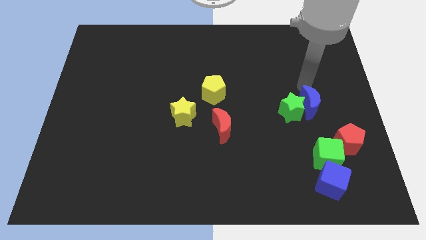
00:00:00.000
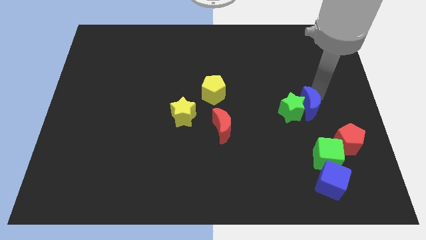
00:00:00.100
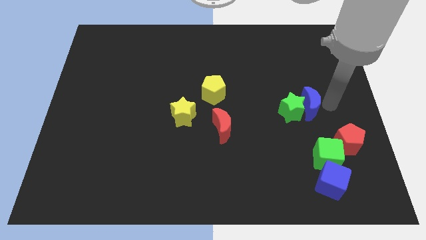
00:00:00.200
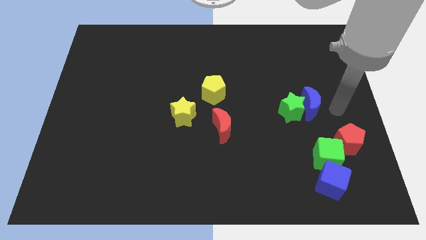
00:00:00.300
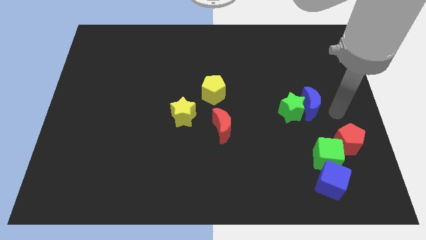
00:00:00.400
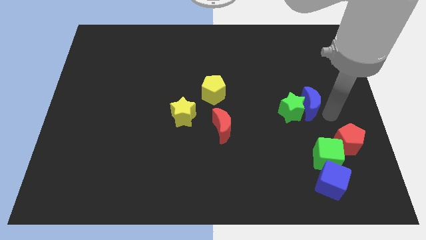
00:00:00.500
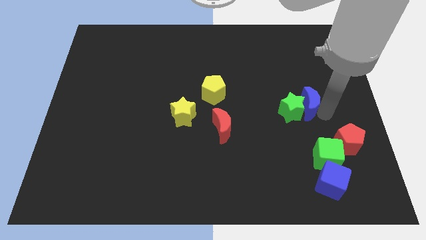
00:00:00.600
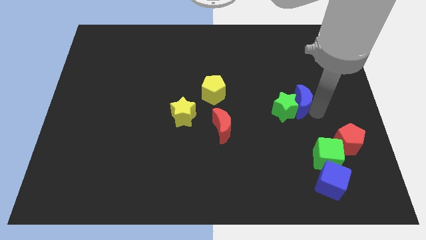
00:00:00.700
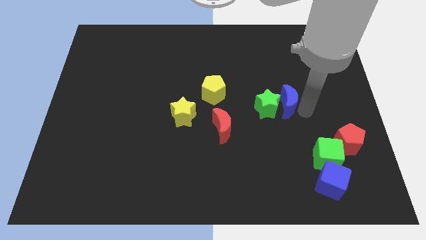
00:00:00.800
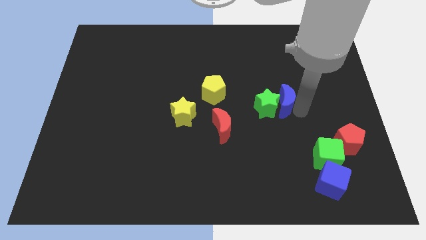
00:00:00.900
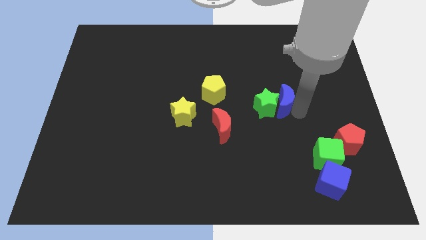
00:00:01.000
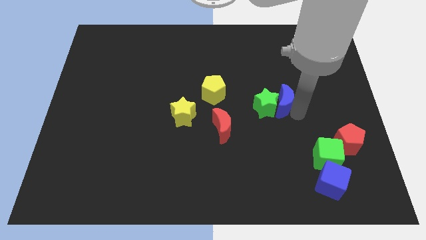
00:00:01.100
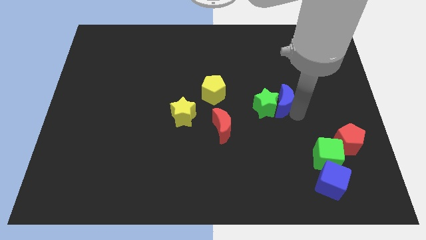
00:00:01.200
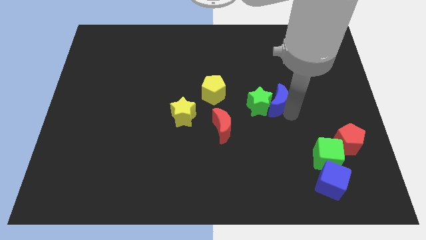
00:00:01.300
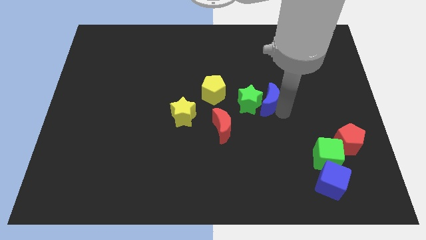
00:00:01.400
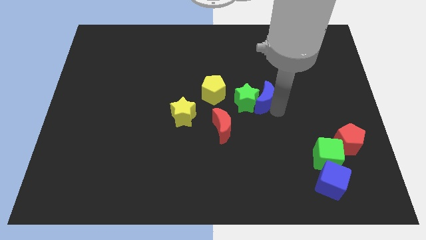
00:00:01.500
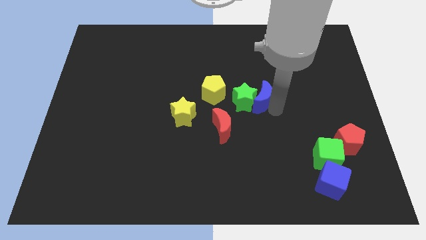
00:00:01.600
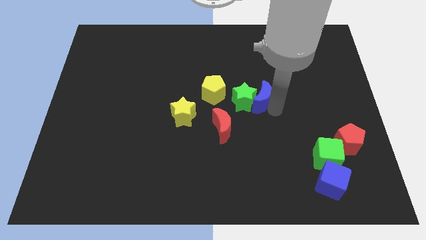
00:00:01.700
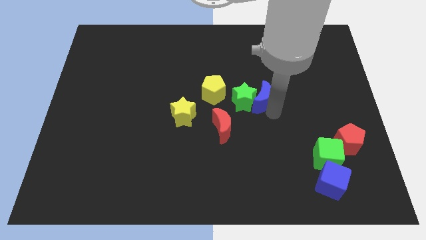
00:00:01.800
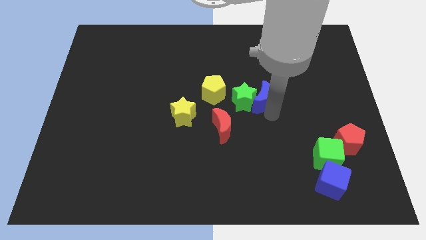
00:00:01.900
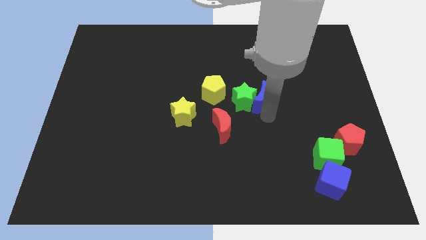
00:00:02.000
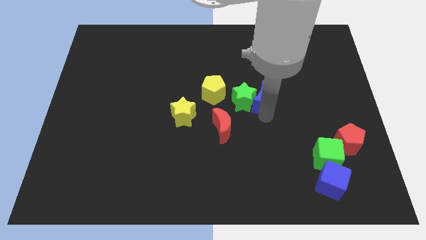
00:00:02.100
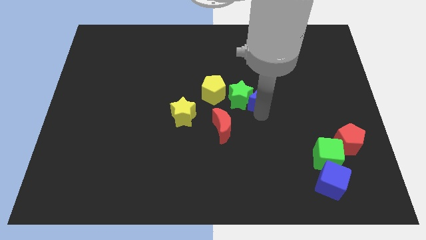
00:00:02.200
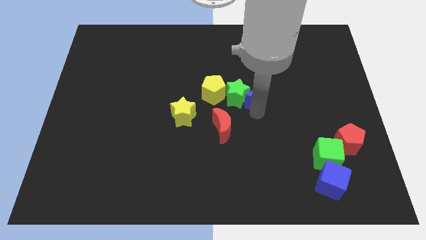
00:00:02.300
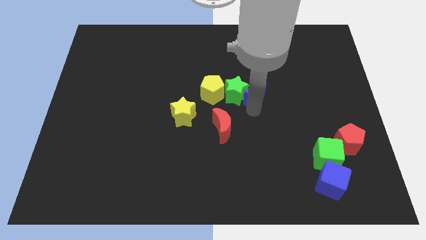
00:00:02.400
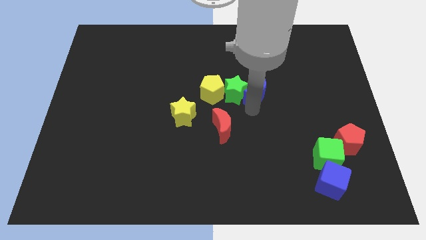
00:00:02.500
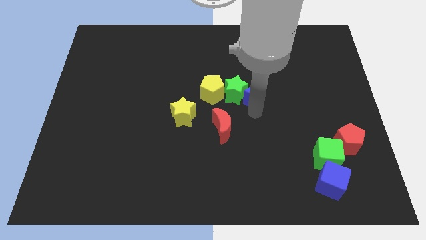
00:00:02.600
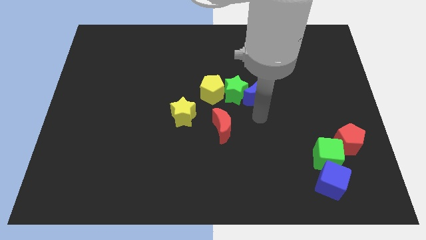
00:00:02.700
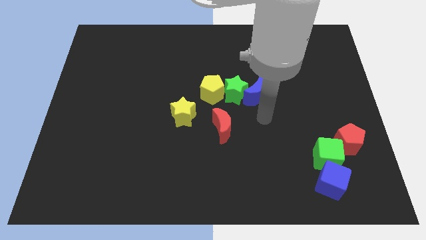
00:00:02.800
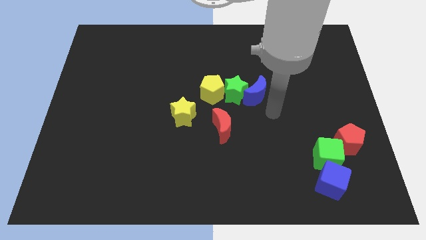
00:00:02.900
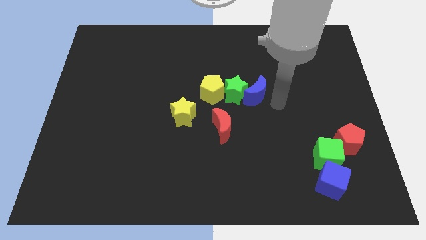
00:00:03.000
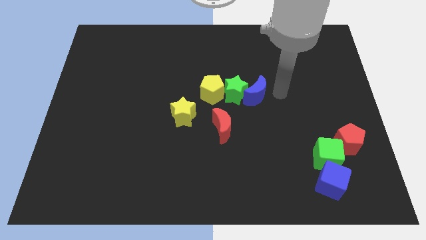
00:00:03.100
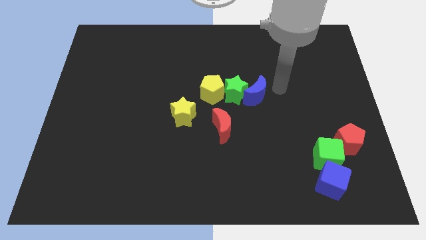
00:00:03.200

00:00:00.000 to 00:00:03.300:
move blue crescent and green star to the right of yellow pentagon

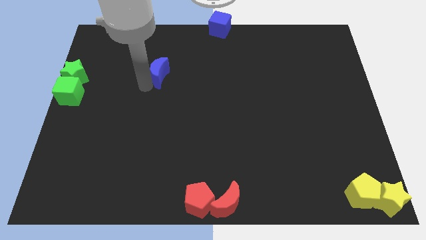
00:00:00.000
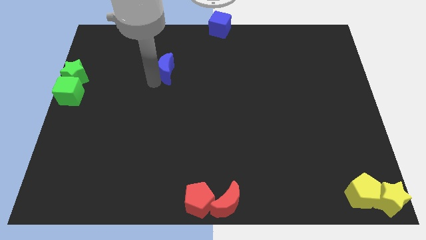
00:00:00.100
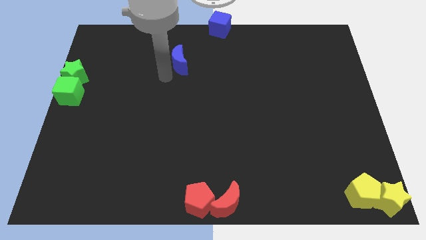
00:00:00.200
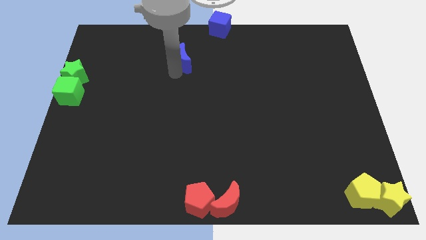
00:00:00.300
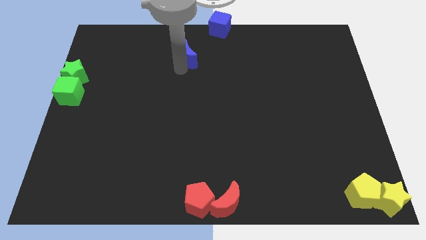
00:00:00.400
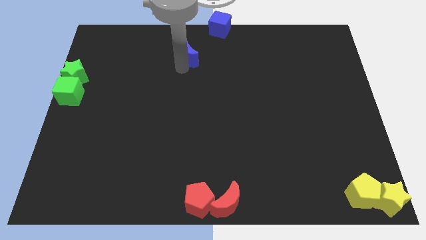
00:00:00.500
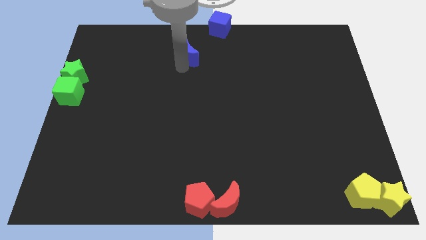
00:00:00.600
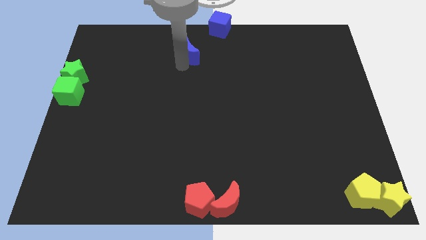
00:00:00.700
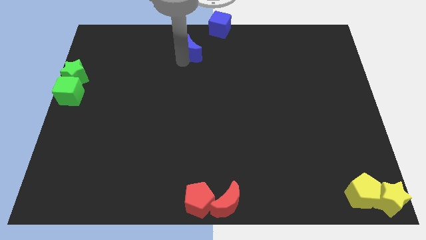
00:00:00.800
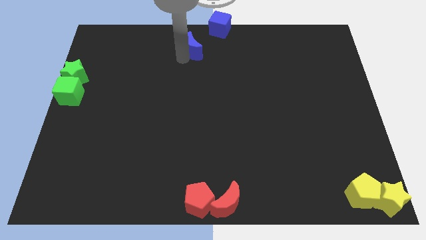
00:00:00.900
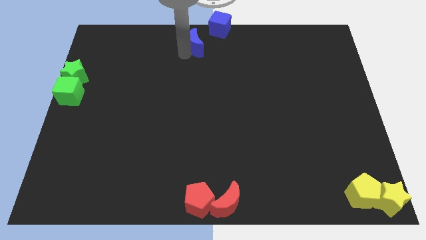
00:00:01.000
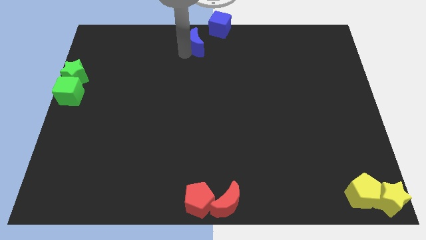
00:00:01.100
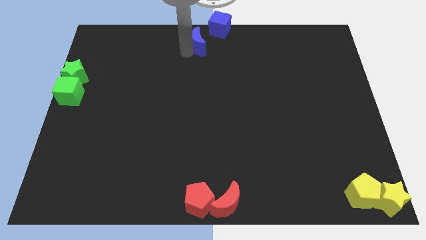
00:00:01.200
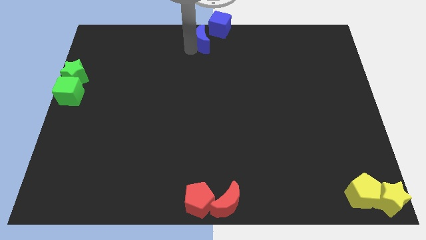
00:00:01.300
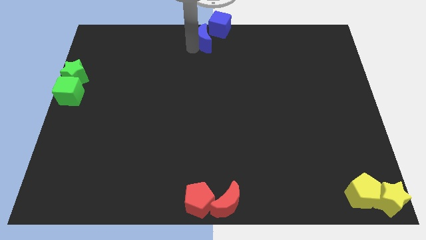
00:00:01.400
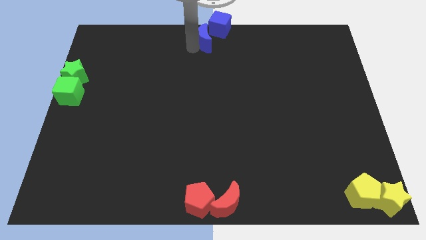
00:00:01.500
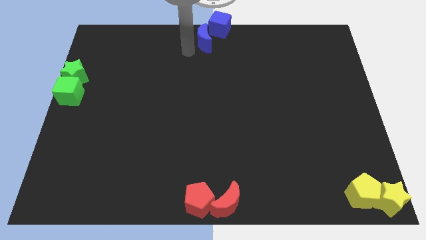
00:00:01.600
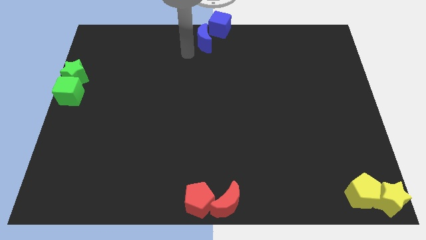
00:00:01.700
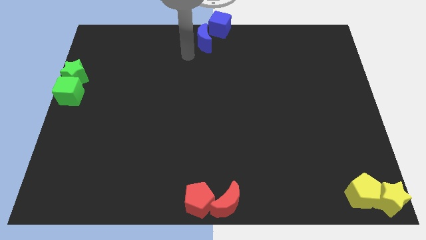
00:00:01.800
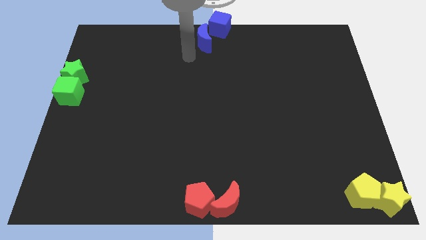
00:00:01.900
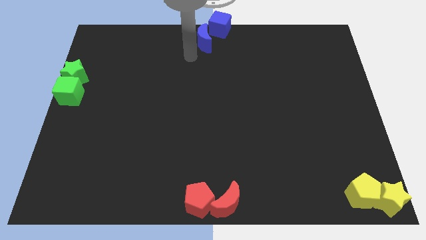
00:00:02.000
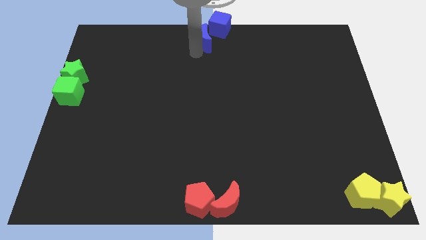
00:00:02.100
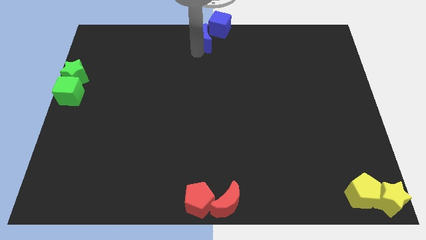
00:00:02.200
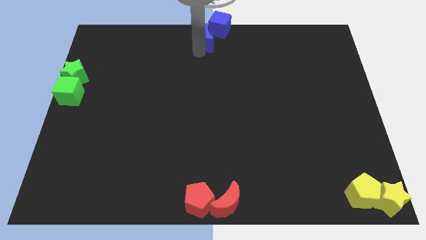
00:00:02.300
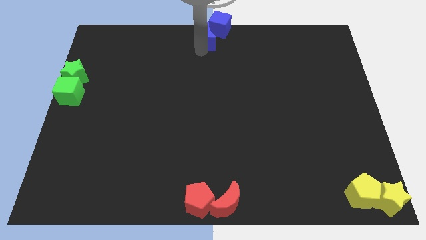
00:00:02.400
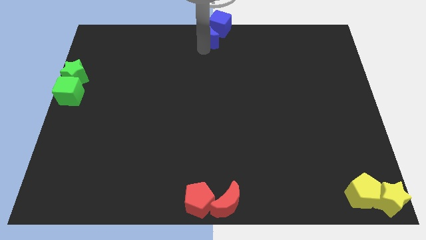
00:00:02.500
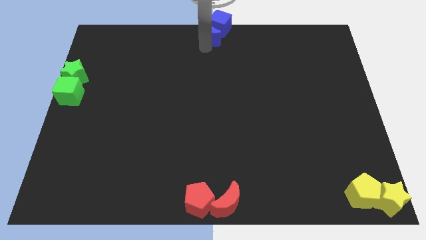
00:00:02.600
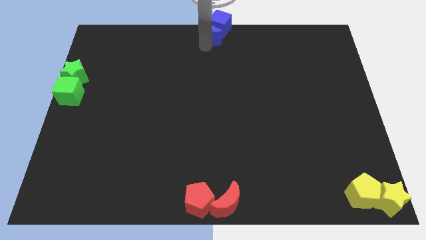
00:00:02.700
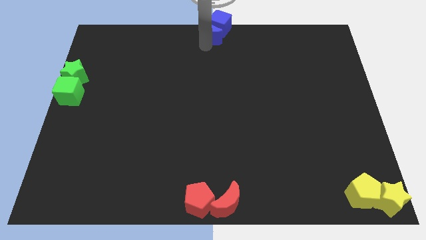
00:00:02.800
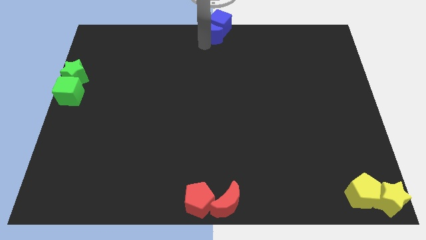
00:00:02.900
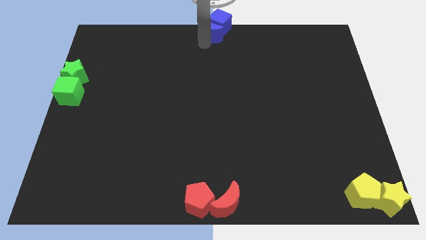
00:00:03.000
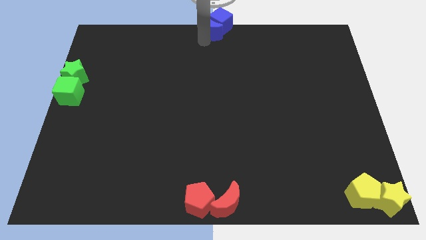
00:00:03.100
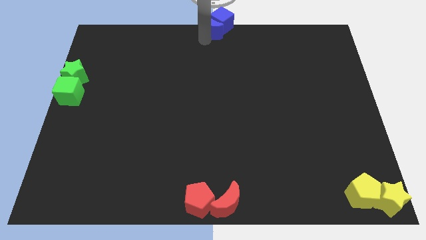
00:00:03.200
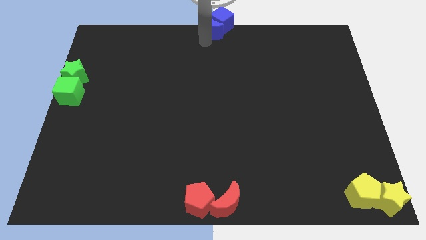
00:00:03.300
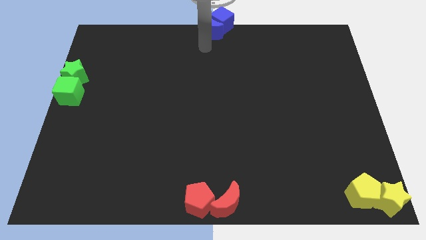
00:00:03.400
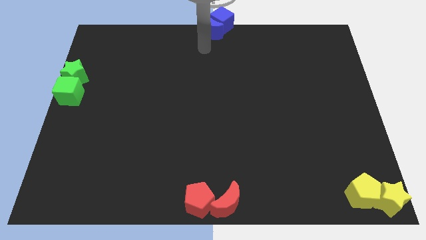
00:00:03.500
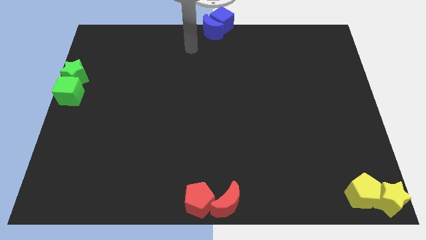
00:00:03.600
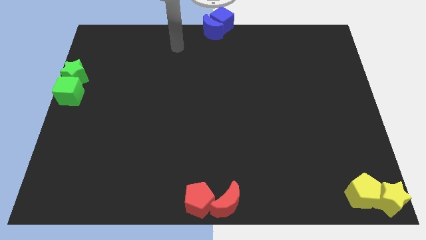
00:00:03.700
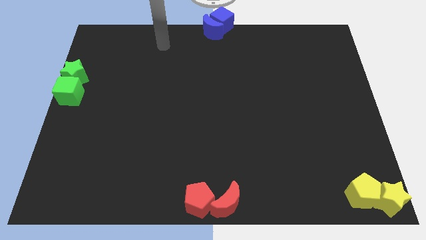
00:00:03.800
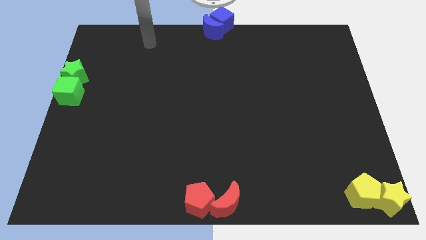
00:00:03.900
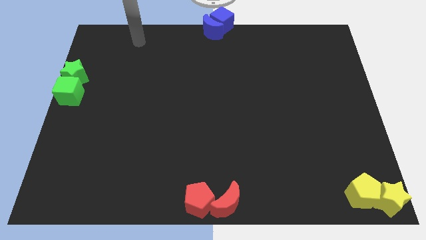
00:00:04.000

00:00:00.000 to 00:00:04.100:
place the blue crescent at the top center

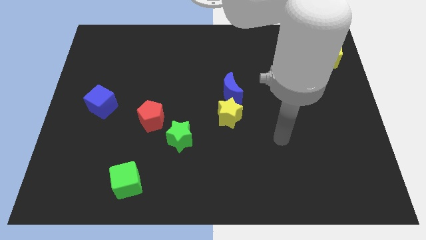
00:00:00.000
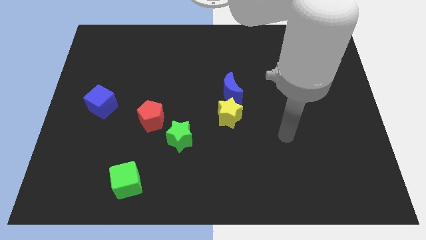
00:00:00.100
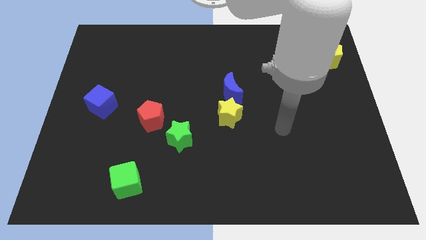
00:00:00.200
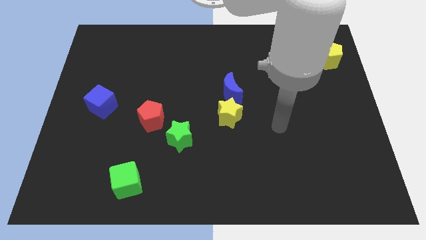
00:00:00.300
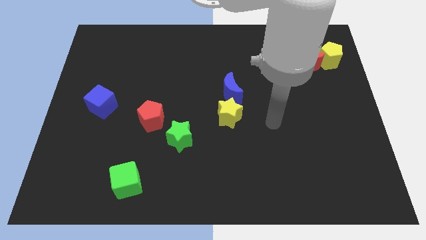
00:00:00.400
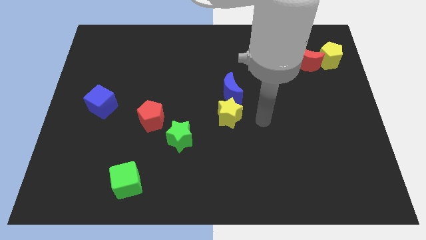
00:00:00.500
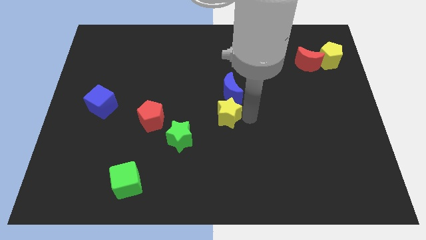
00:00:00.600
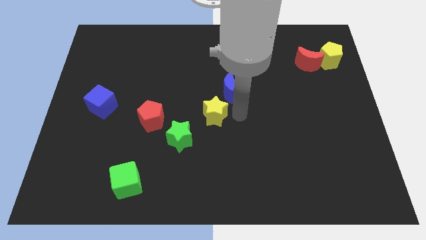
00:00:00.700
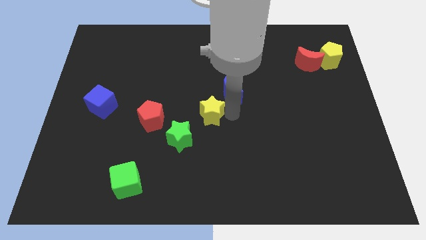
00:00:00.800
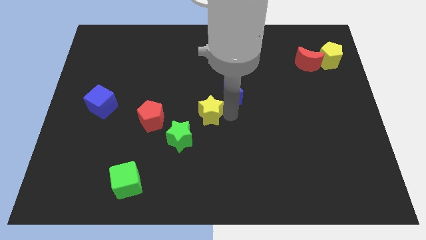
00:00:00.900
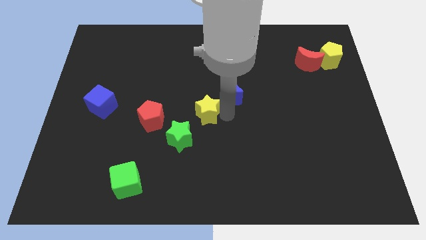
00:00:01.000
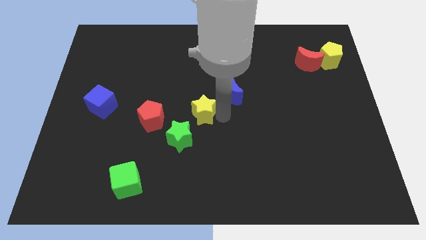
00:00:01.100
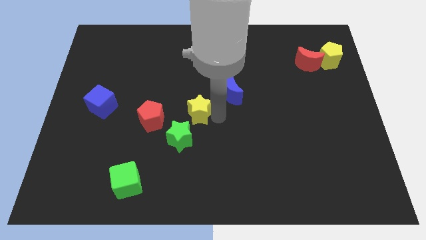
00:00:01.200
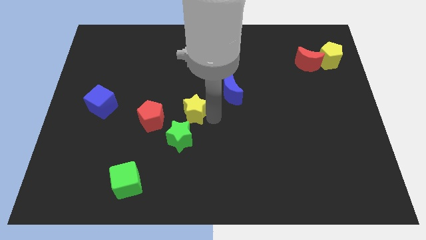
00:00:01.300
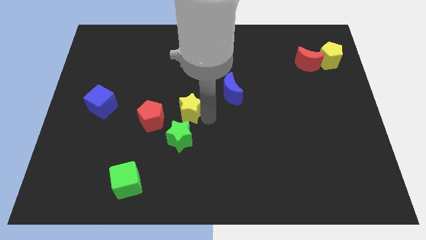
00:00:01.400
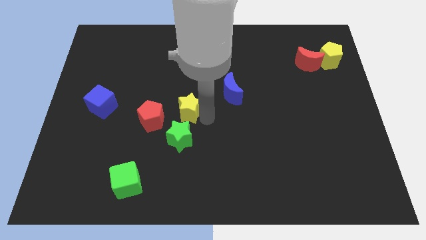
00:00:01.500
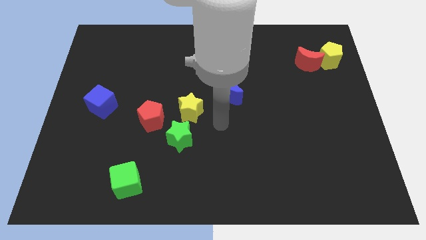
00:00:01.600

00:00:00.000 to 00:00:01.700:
place the yellow star above the green star
